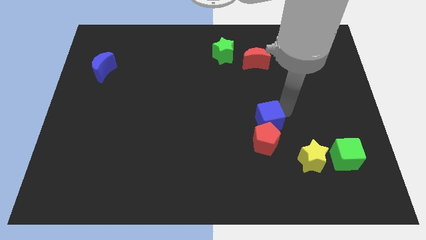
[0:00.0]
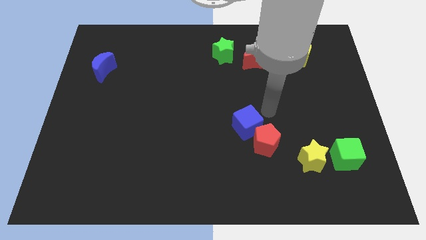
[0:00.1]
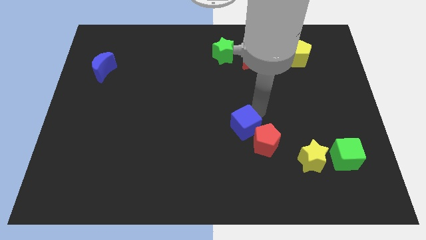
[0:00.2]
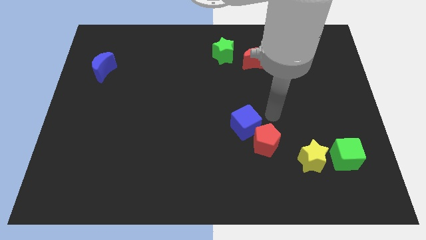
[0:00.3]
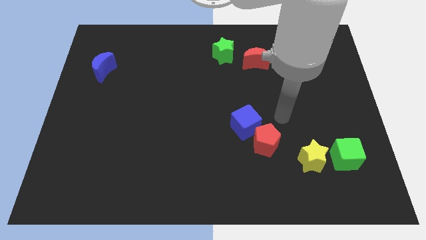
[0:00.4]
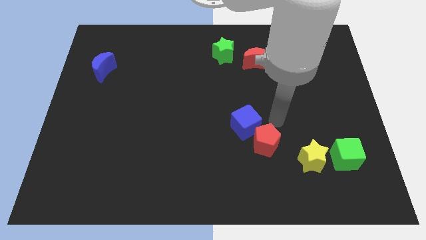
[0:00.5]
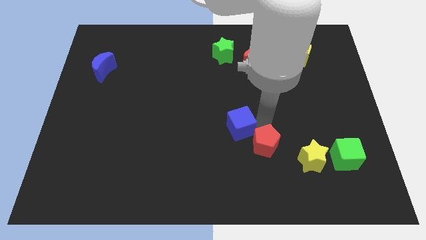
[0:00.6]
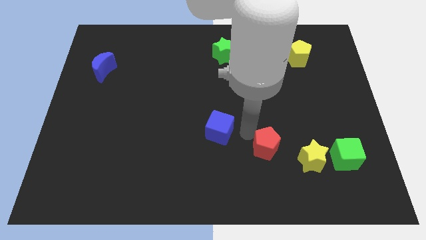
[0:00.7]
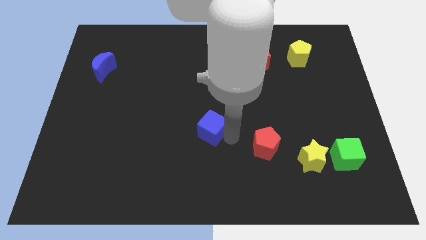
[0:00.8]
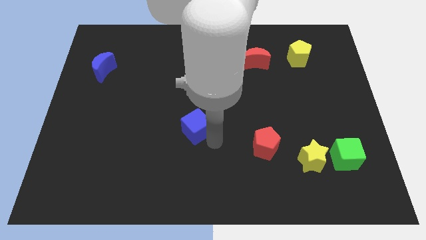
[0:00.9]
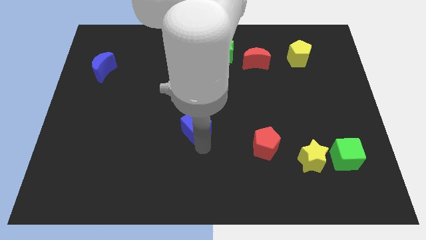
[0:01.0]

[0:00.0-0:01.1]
separate blue cube from red pentagon

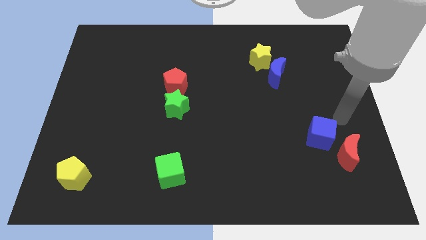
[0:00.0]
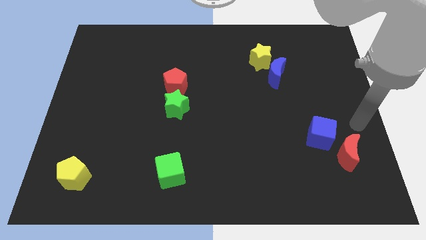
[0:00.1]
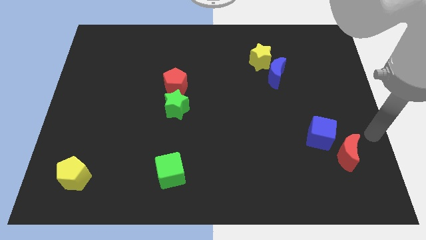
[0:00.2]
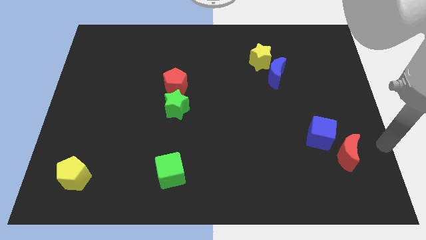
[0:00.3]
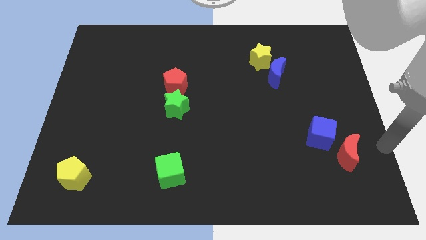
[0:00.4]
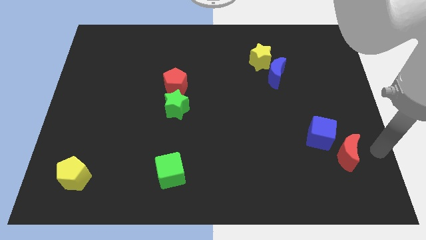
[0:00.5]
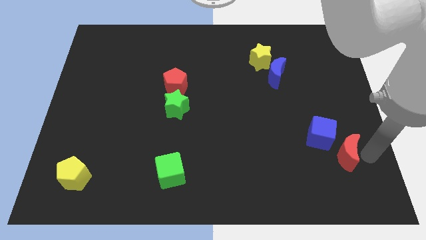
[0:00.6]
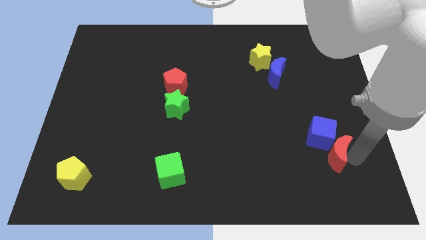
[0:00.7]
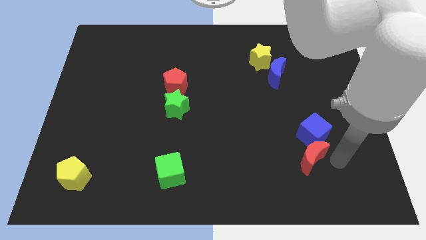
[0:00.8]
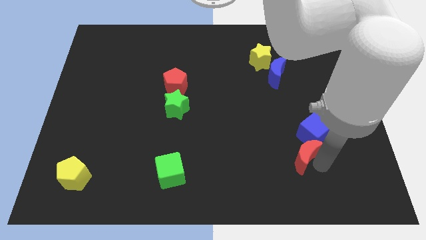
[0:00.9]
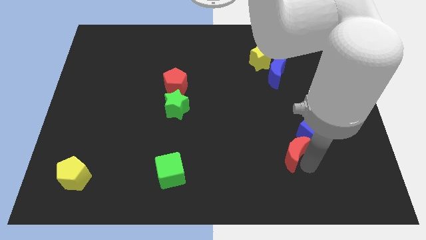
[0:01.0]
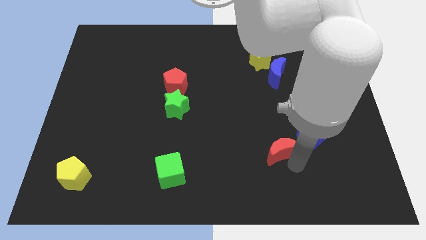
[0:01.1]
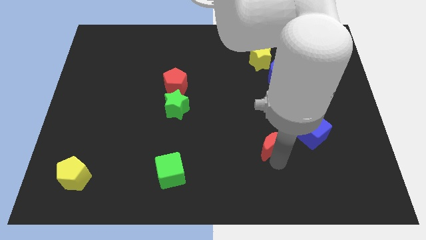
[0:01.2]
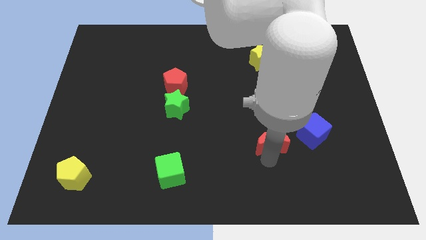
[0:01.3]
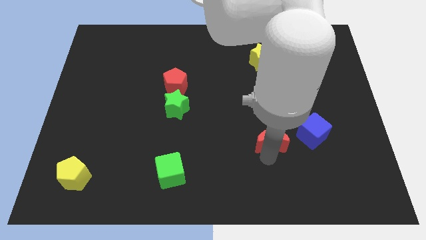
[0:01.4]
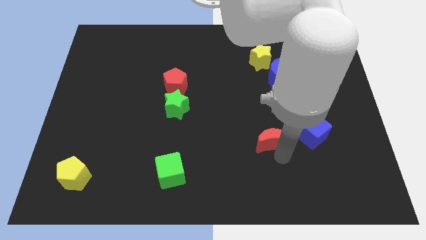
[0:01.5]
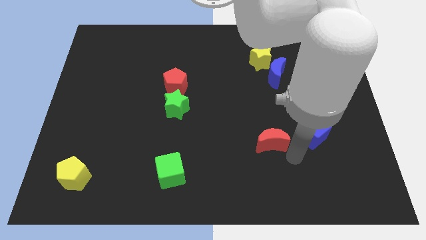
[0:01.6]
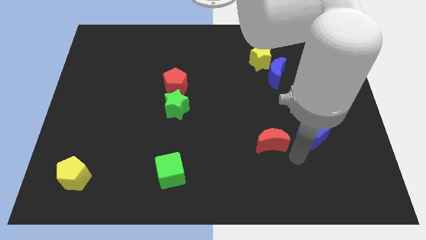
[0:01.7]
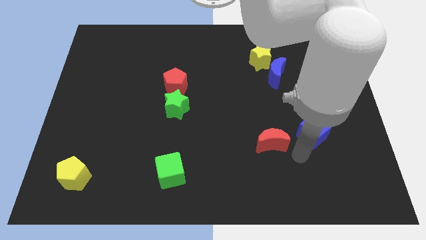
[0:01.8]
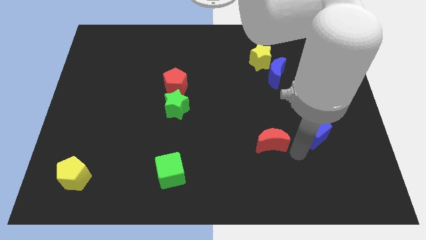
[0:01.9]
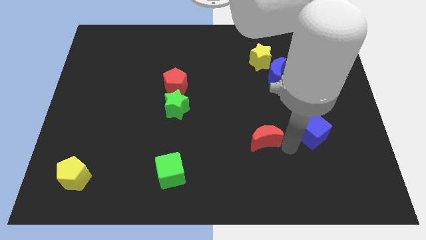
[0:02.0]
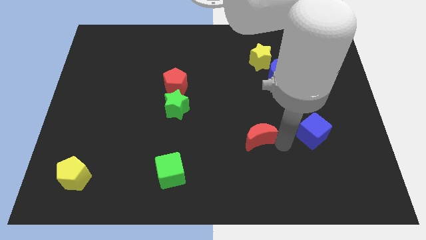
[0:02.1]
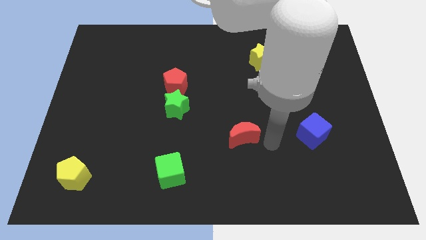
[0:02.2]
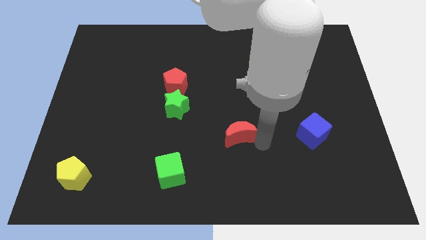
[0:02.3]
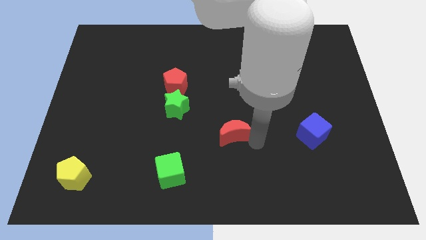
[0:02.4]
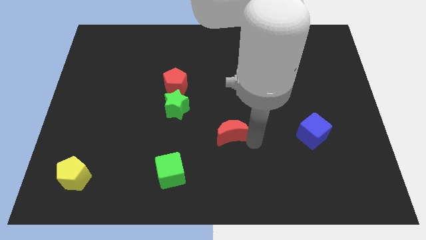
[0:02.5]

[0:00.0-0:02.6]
move the red moon to the left of blue cube

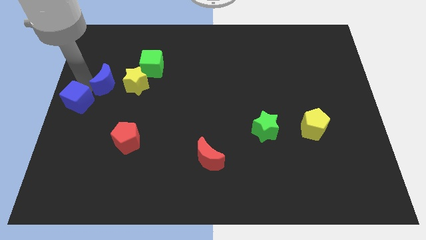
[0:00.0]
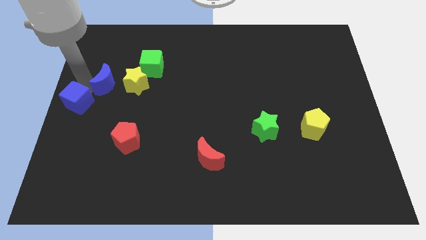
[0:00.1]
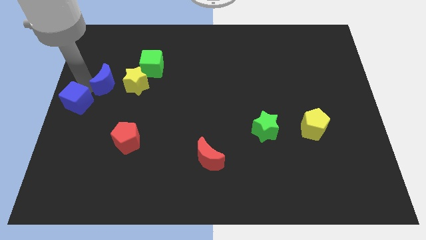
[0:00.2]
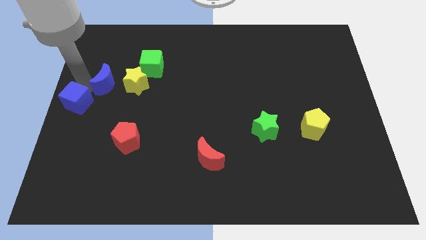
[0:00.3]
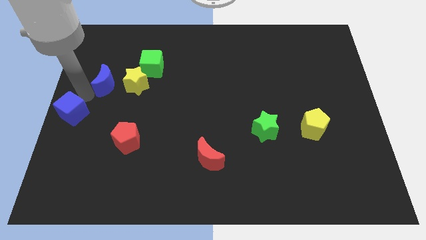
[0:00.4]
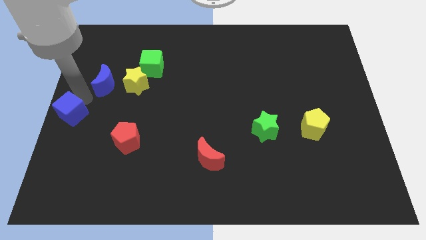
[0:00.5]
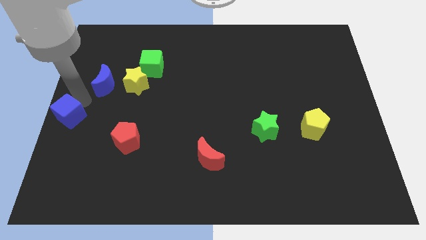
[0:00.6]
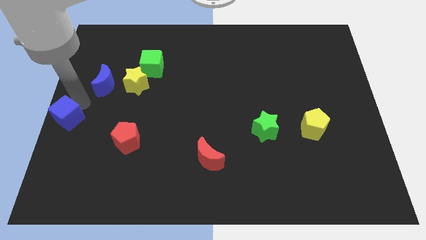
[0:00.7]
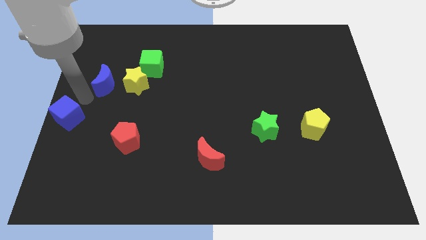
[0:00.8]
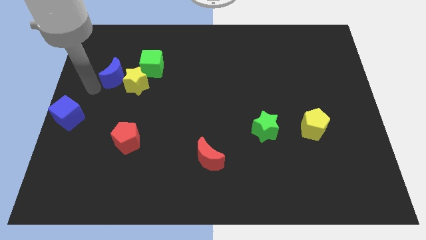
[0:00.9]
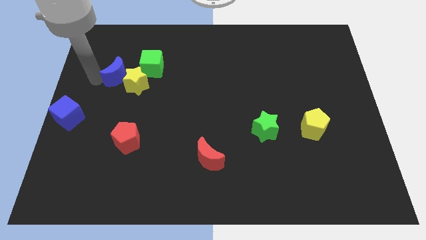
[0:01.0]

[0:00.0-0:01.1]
separate blue blocks from each other

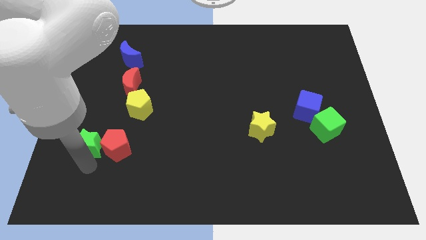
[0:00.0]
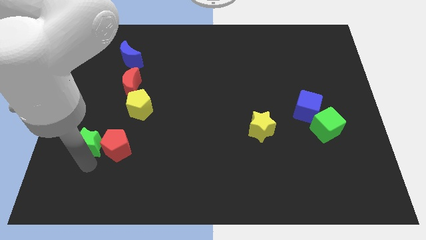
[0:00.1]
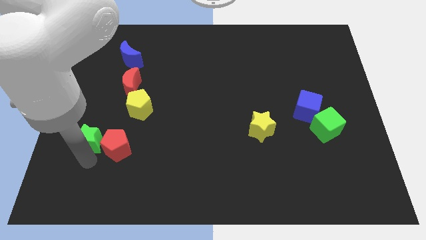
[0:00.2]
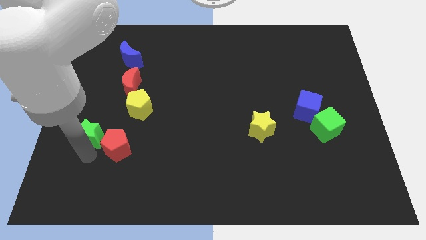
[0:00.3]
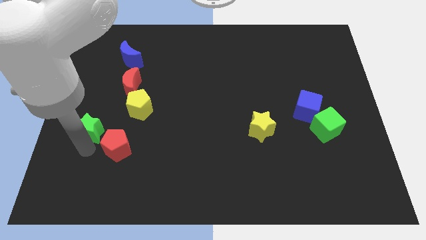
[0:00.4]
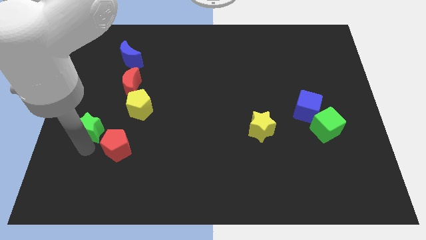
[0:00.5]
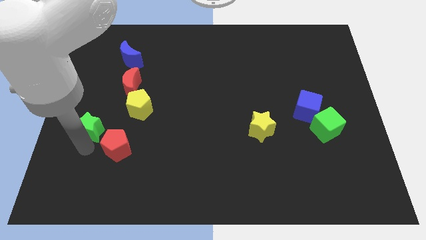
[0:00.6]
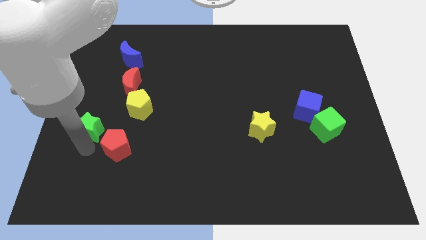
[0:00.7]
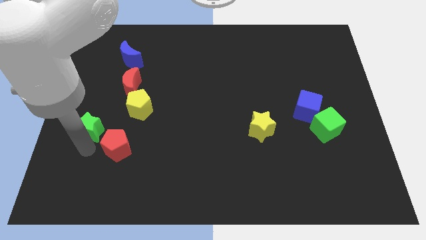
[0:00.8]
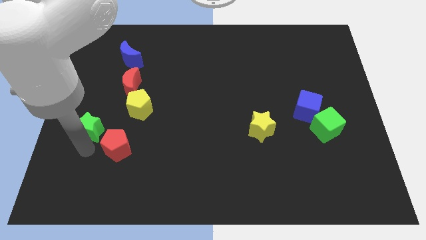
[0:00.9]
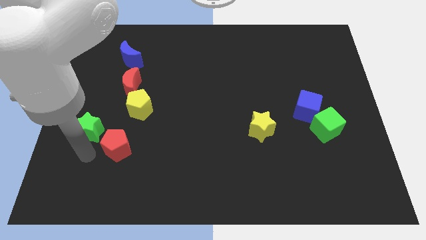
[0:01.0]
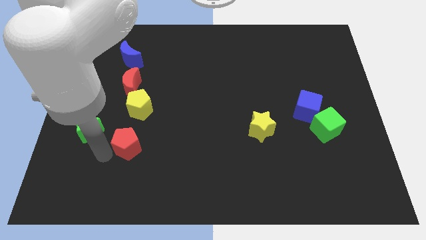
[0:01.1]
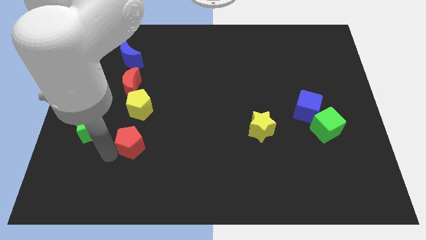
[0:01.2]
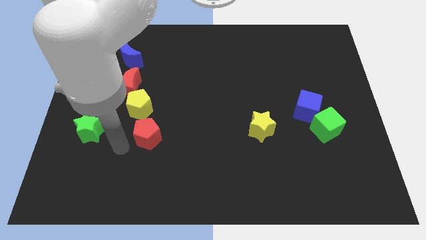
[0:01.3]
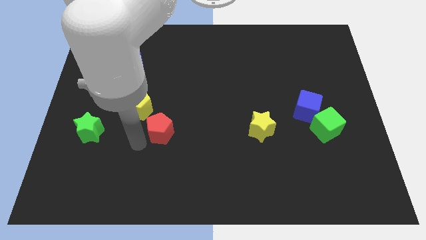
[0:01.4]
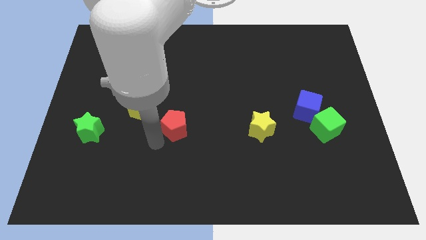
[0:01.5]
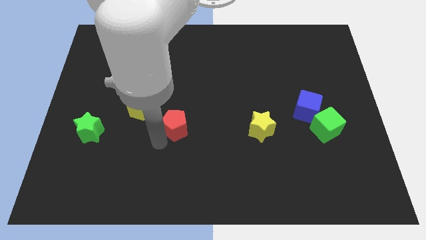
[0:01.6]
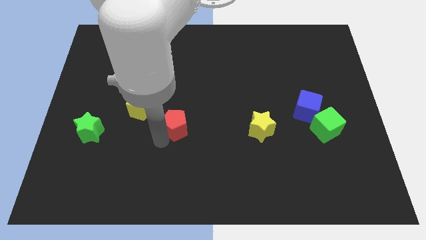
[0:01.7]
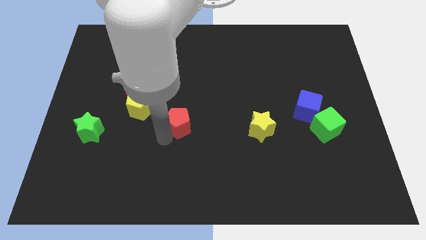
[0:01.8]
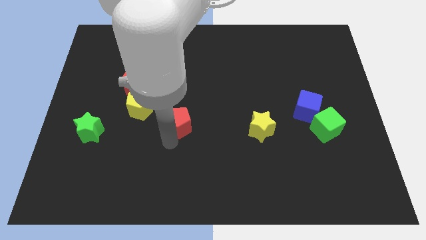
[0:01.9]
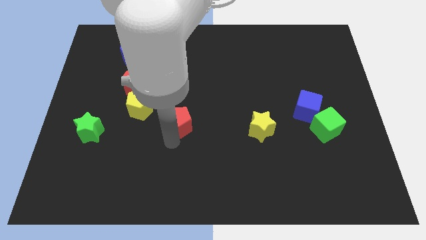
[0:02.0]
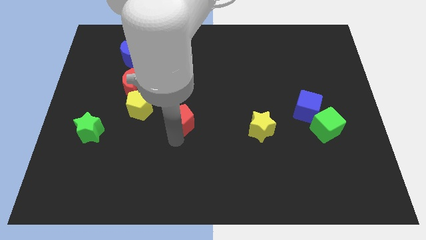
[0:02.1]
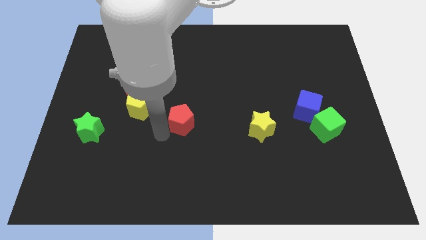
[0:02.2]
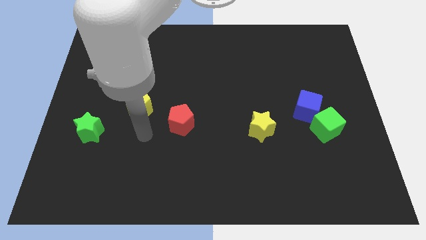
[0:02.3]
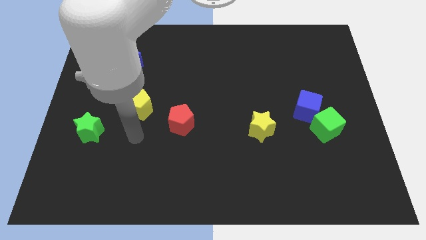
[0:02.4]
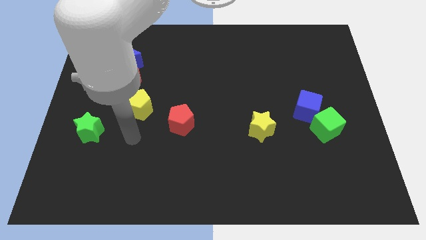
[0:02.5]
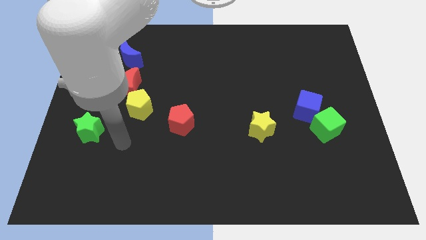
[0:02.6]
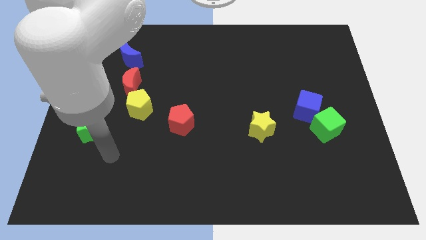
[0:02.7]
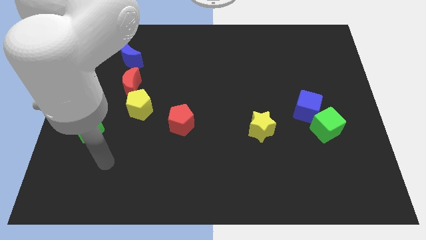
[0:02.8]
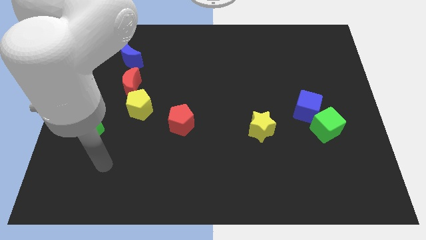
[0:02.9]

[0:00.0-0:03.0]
push red pentagon diagonally below yellow pentagon

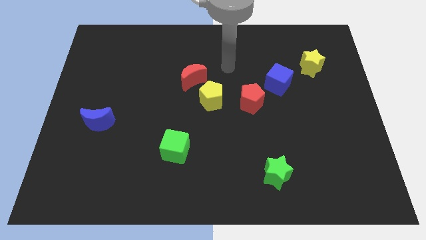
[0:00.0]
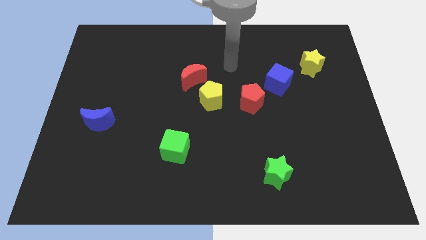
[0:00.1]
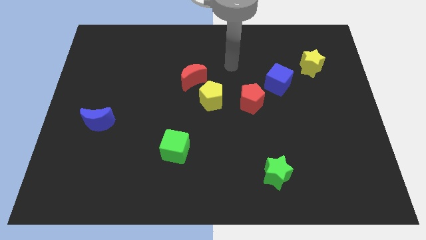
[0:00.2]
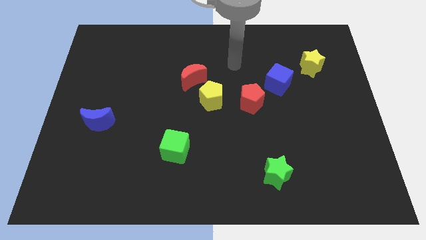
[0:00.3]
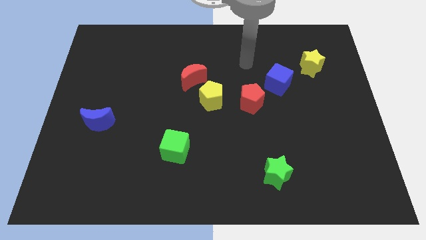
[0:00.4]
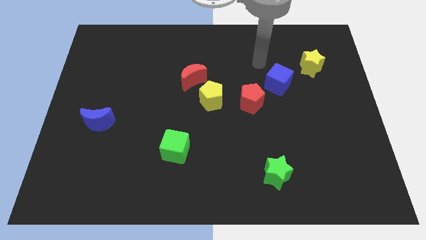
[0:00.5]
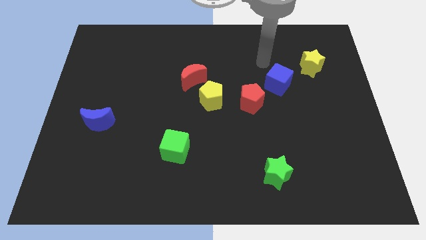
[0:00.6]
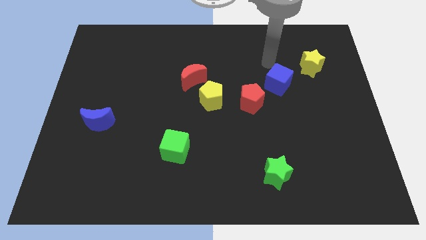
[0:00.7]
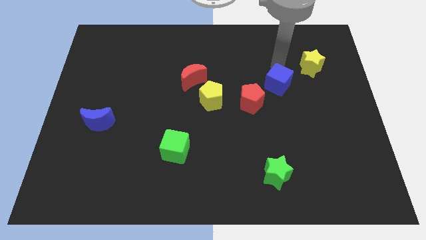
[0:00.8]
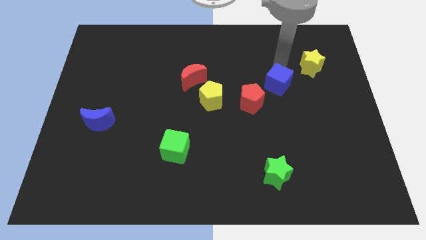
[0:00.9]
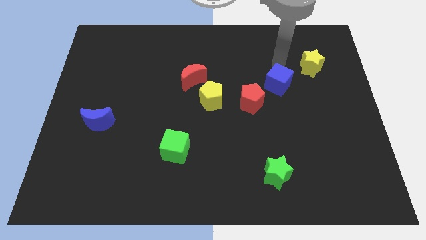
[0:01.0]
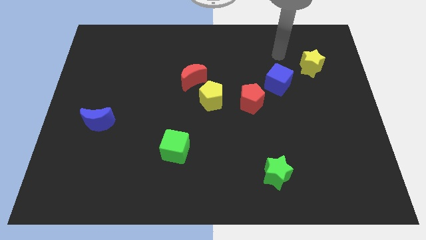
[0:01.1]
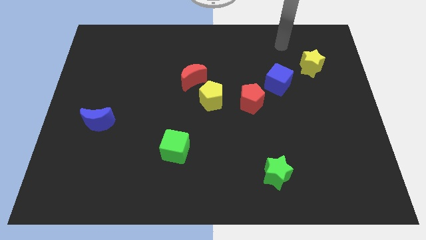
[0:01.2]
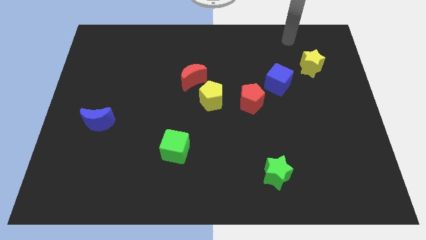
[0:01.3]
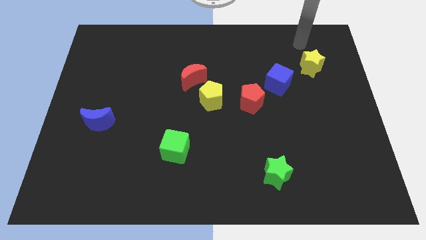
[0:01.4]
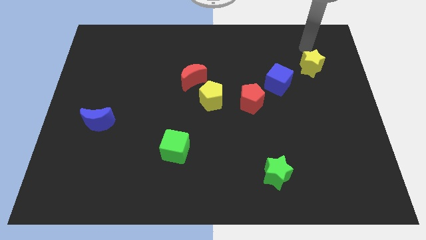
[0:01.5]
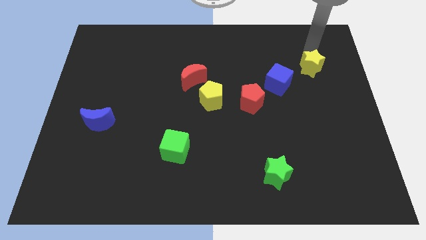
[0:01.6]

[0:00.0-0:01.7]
place your arm to the top of the yellow star
